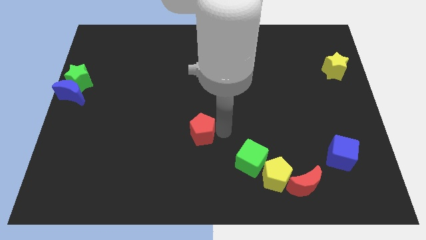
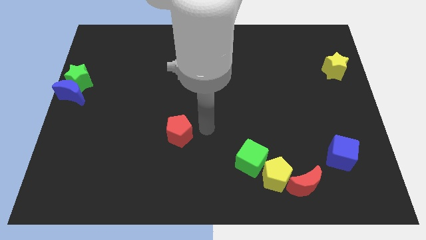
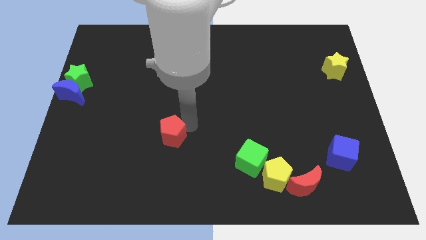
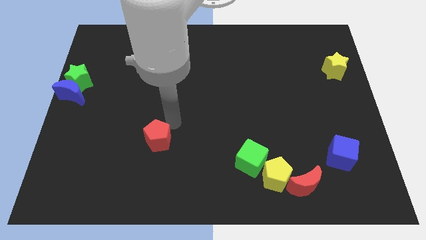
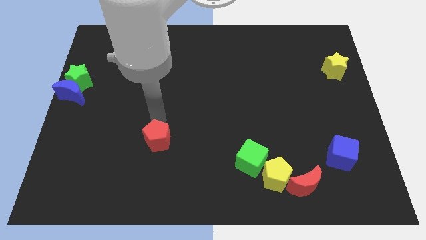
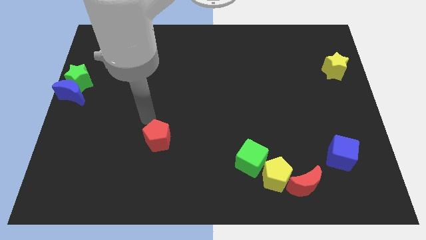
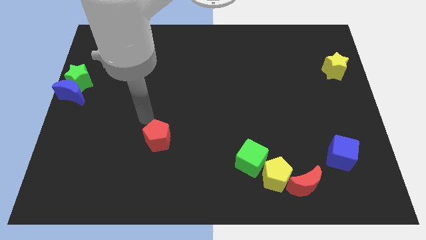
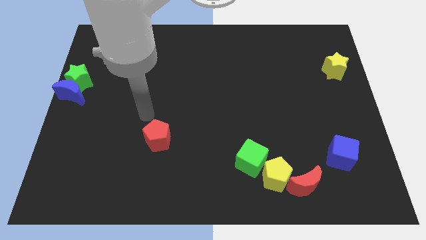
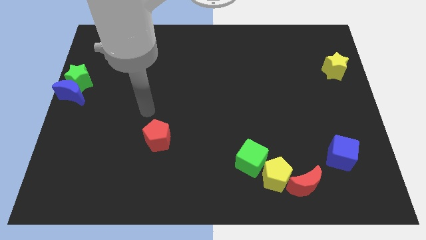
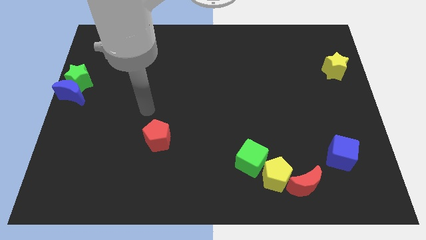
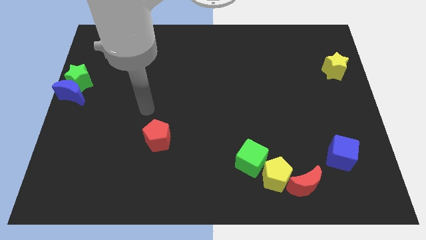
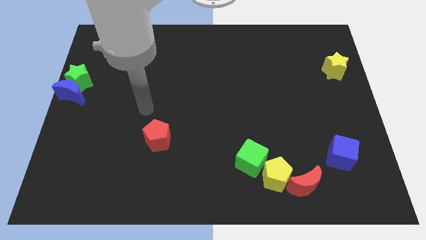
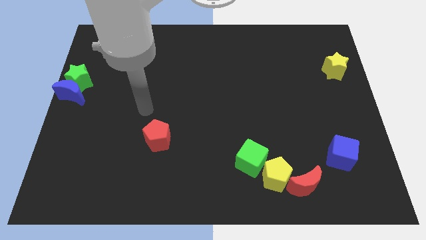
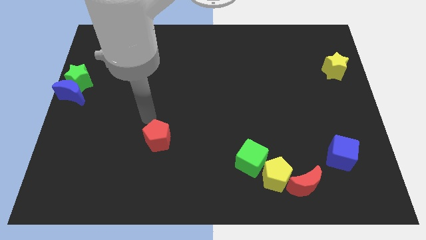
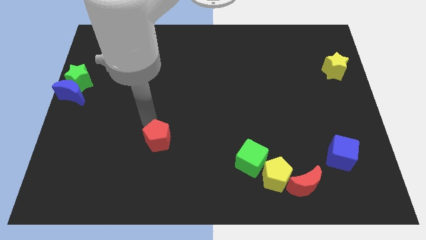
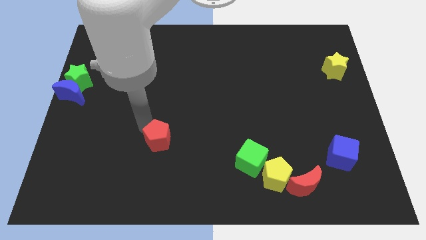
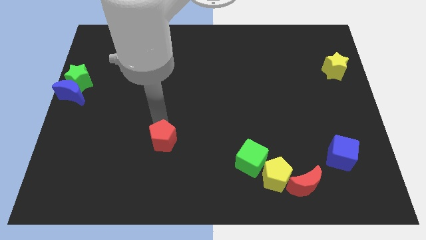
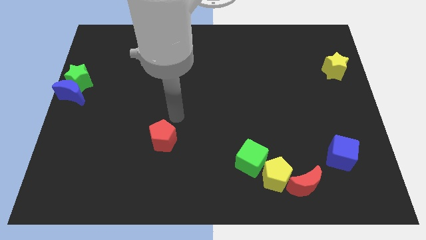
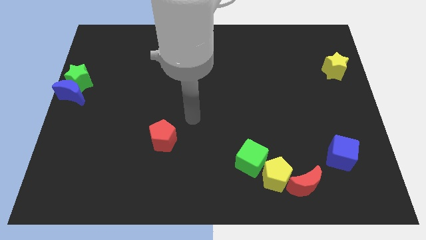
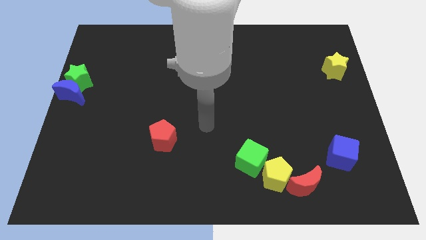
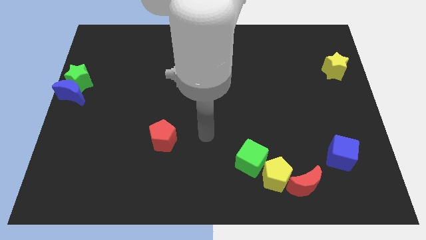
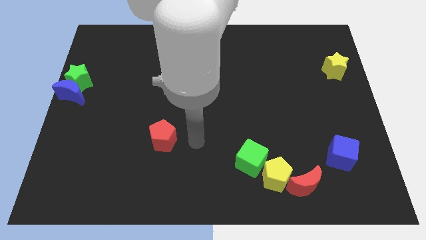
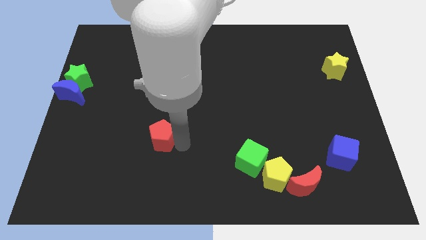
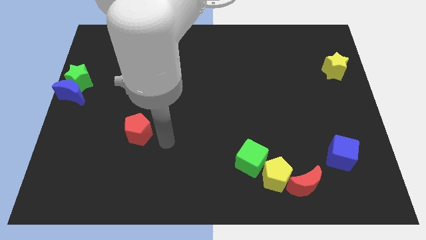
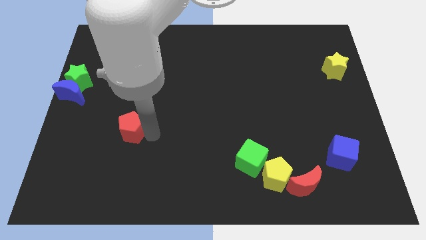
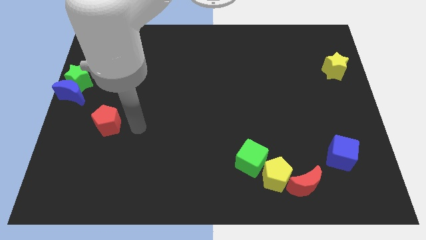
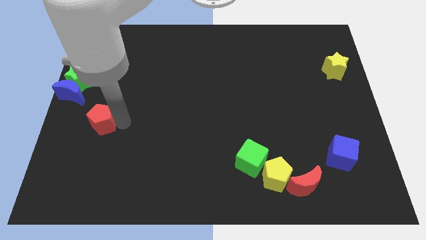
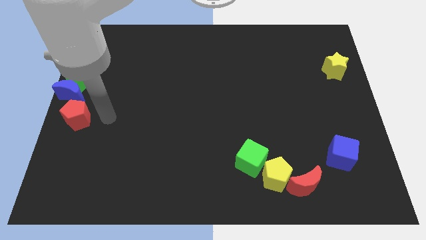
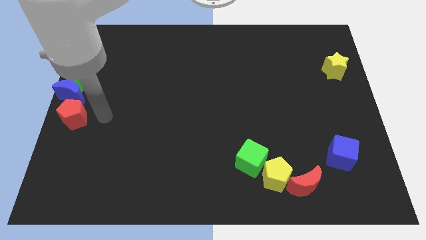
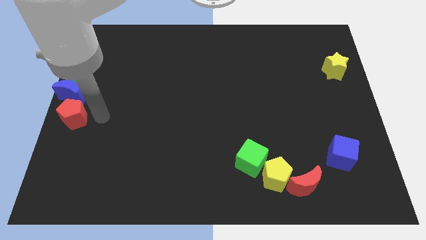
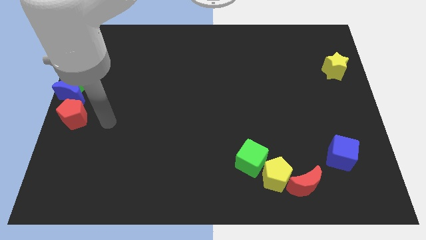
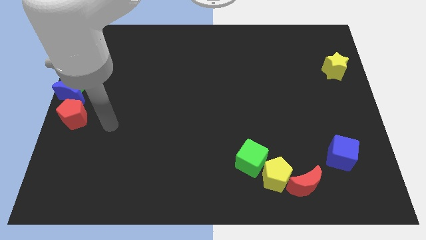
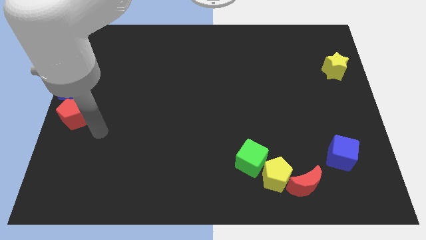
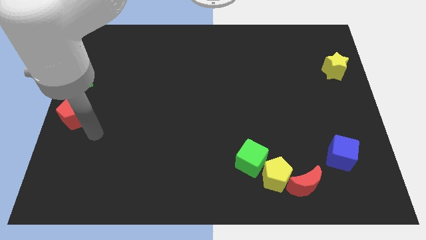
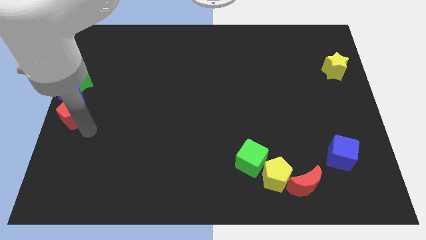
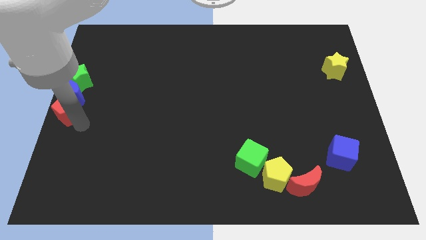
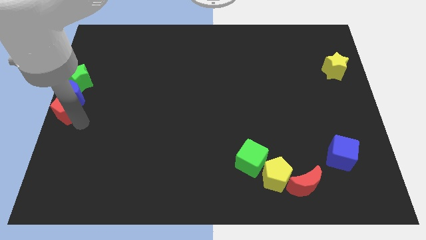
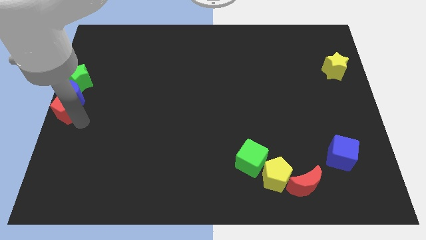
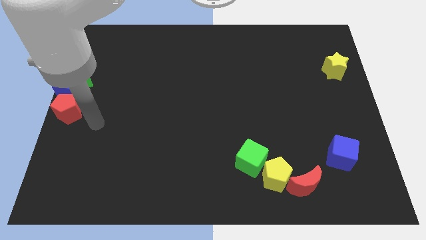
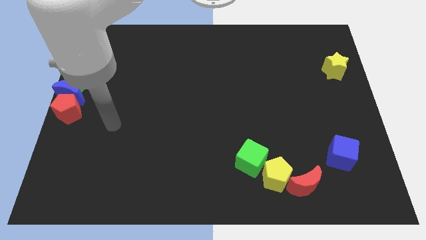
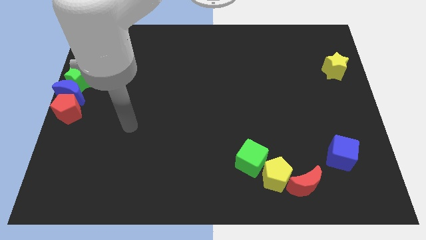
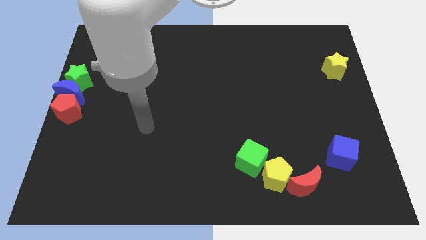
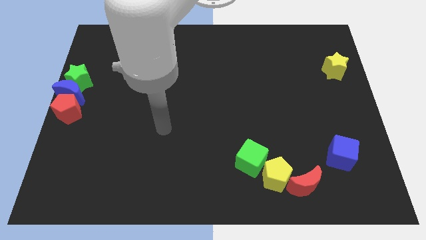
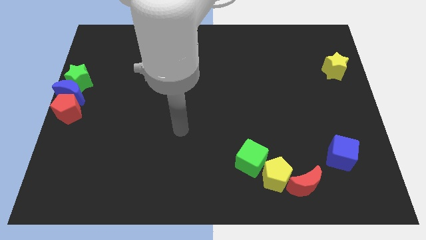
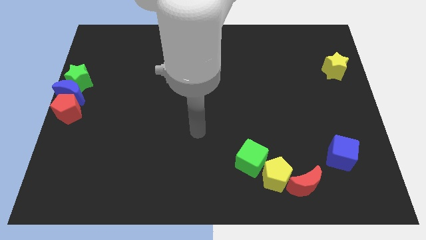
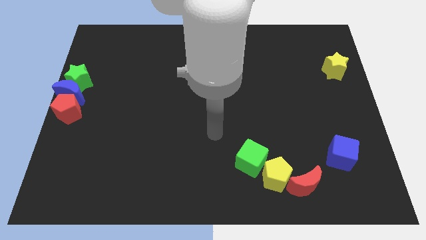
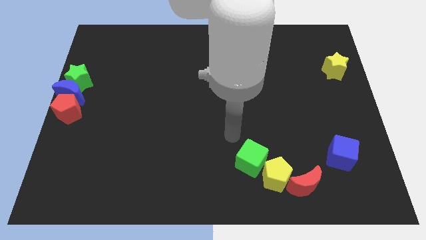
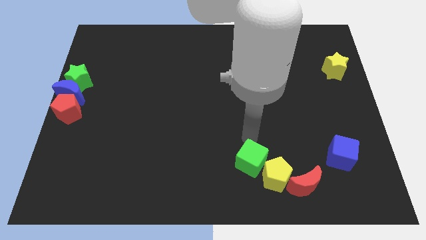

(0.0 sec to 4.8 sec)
move the red pentagon to the bottom of the blue crescent

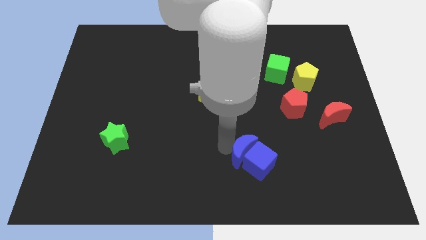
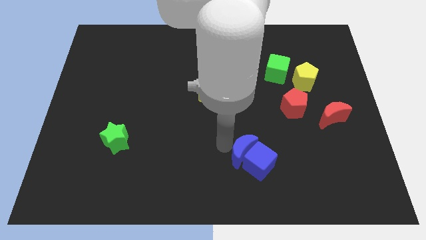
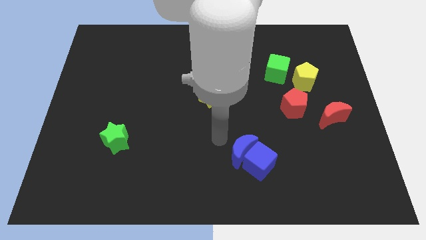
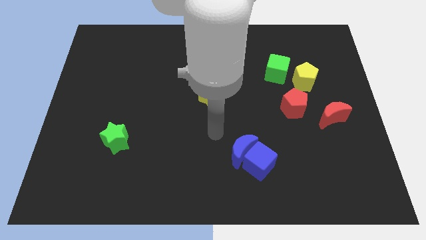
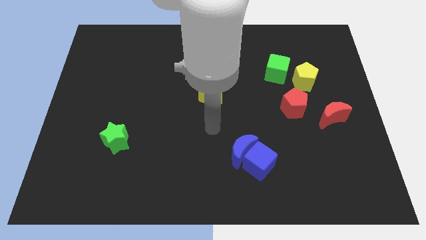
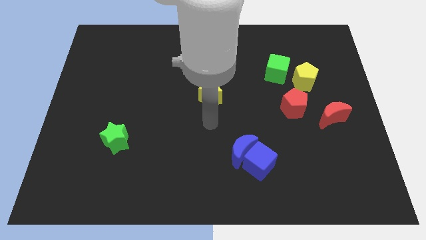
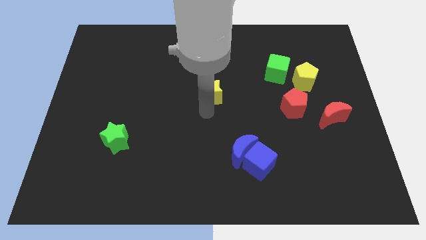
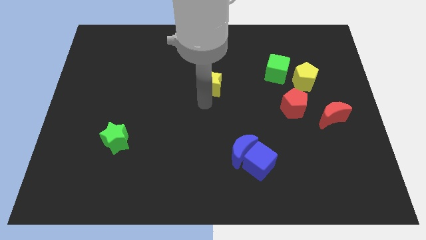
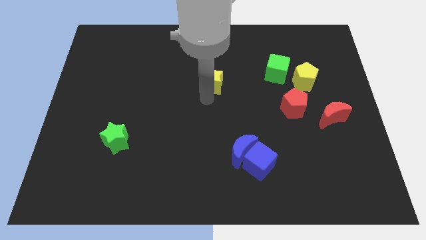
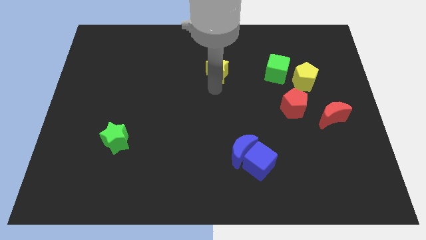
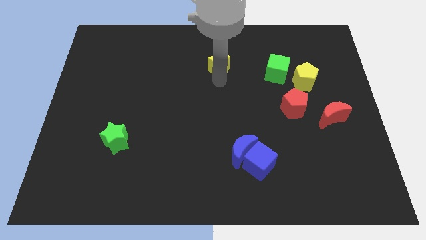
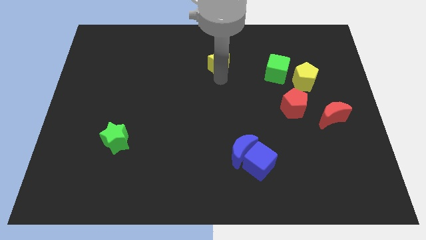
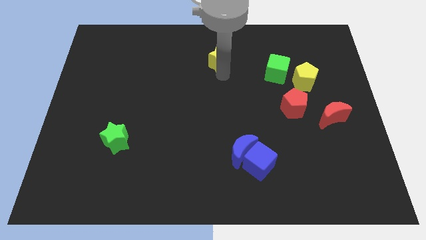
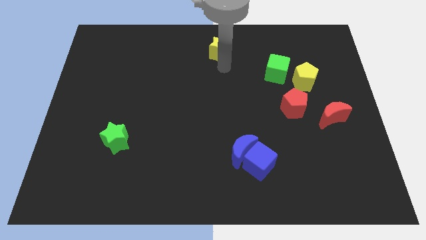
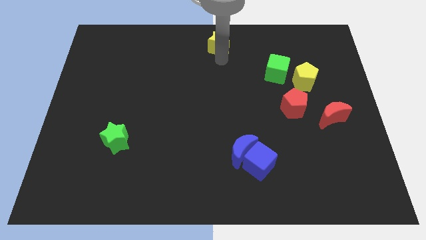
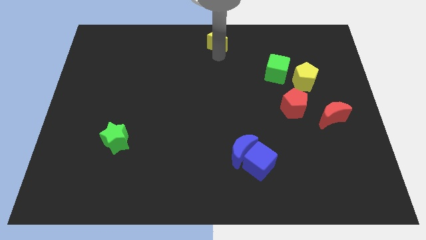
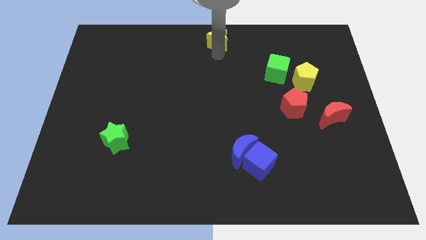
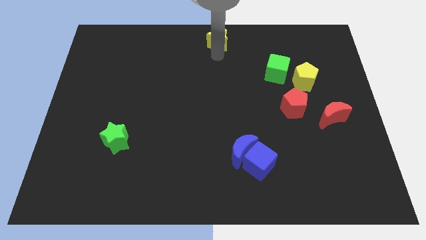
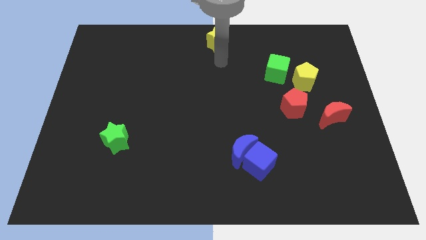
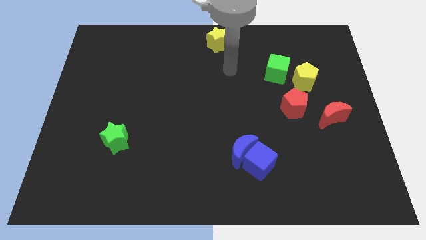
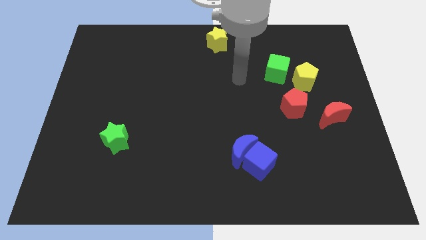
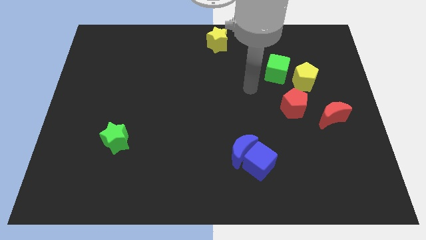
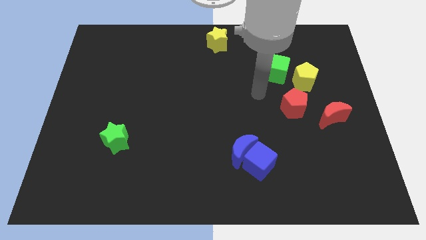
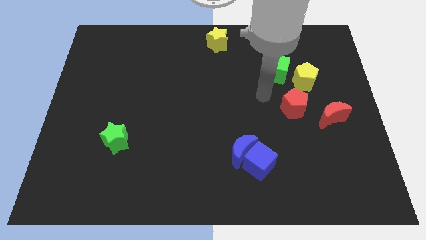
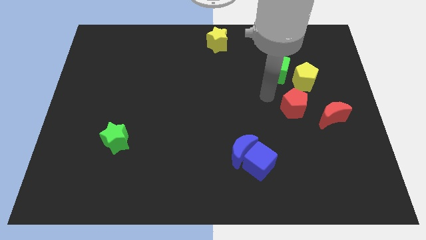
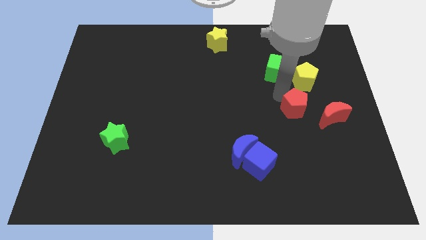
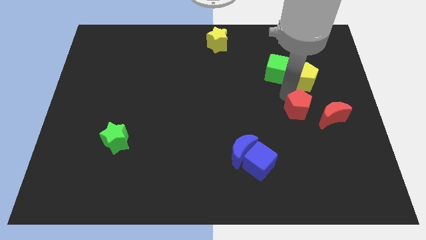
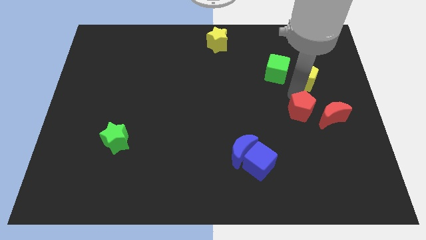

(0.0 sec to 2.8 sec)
place the yellow star at top center of the board

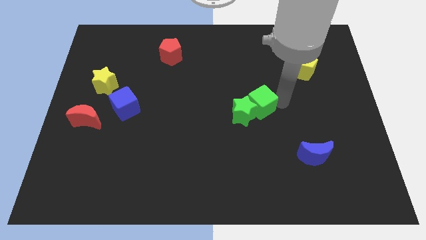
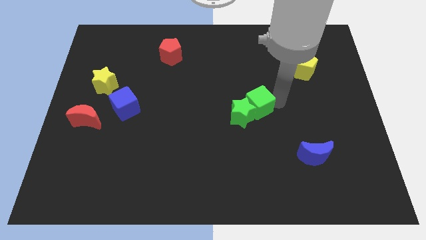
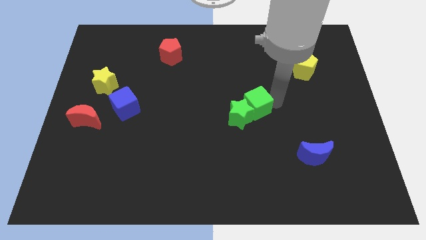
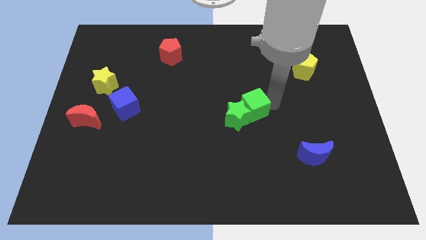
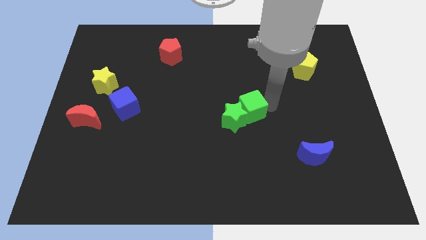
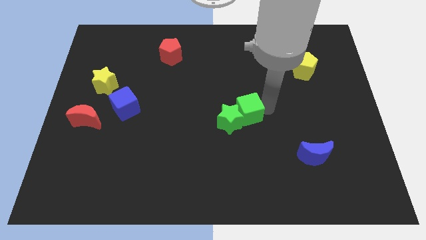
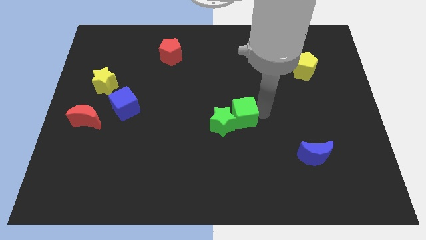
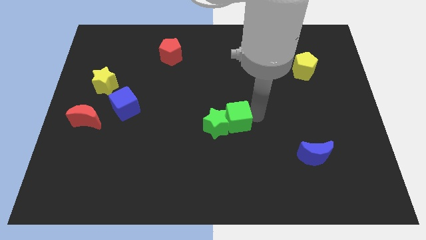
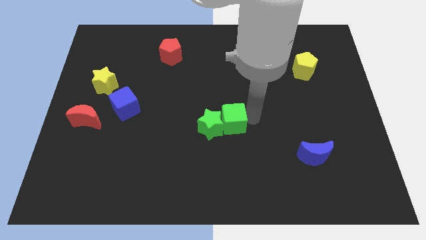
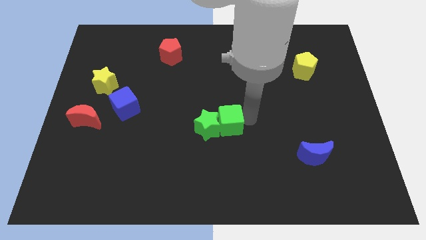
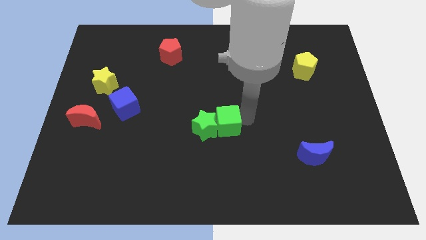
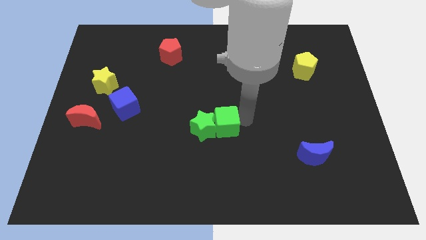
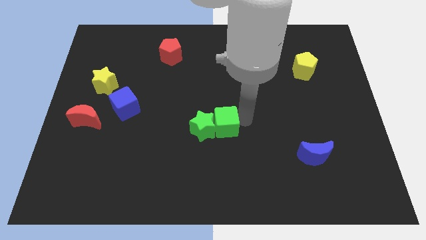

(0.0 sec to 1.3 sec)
move both the green cube and green star to the center of the board
